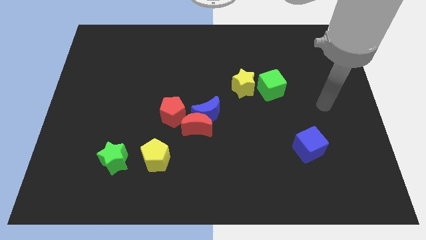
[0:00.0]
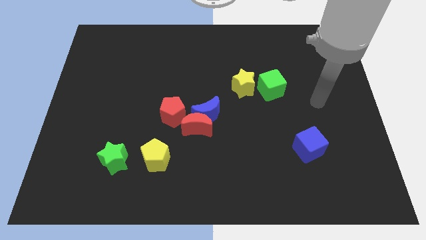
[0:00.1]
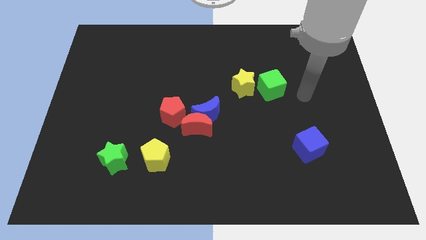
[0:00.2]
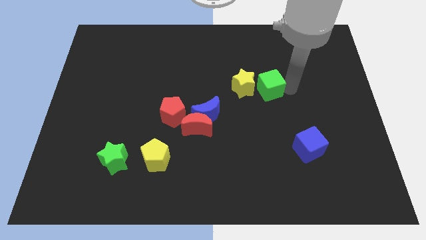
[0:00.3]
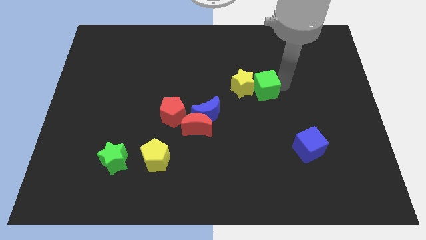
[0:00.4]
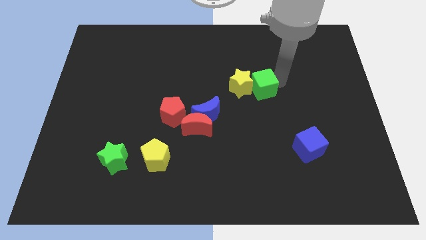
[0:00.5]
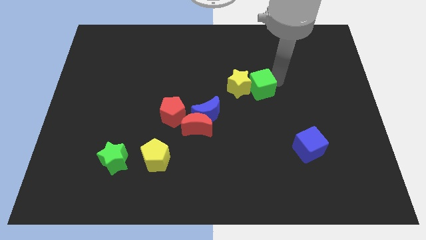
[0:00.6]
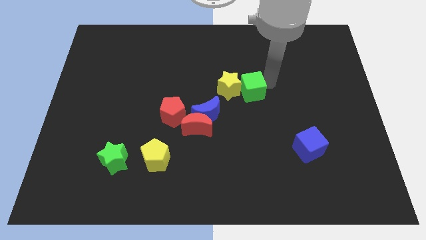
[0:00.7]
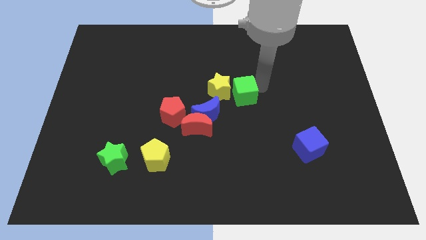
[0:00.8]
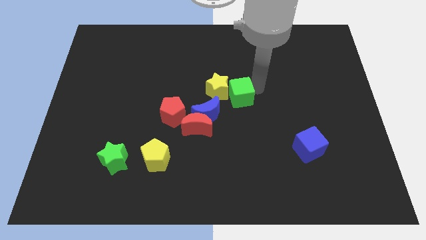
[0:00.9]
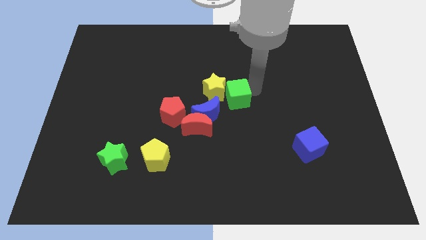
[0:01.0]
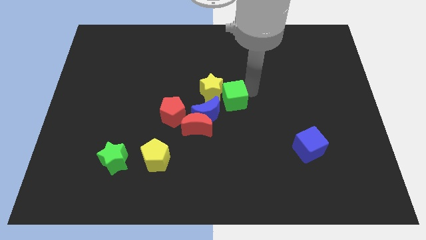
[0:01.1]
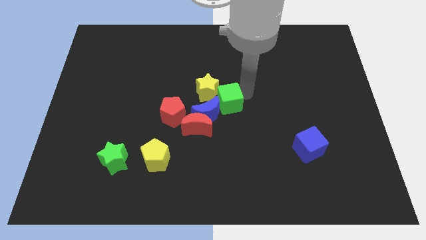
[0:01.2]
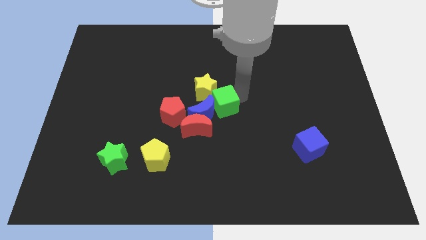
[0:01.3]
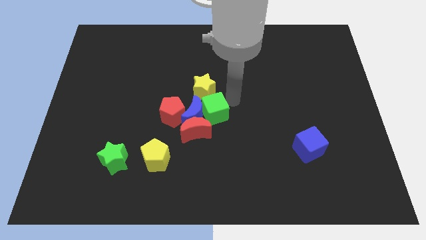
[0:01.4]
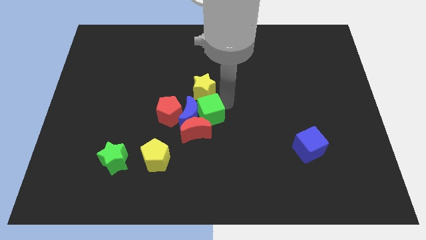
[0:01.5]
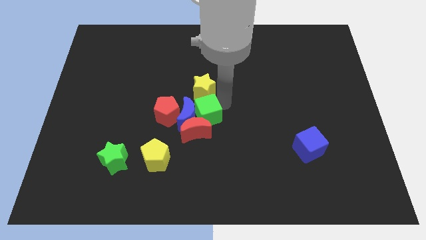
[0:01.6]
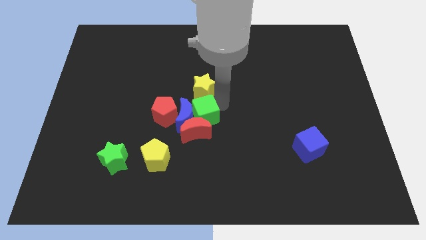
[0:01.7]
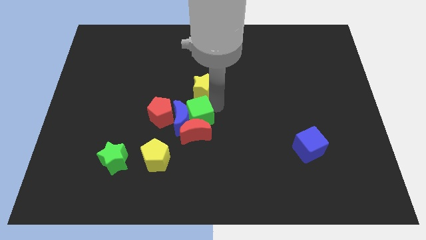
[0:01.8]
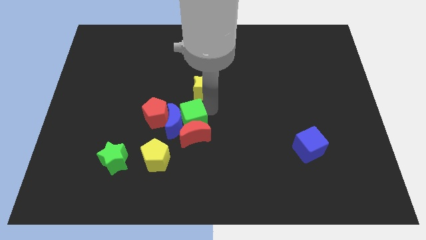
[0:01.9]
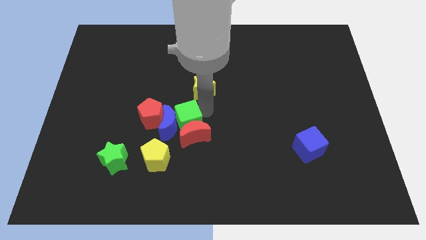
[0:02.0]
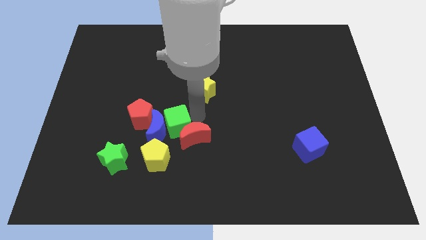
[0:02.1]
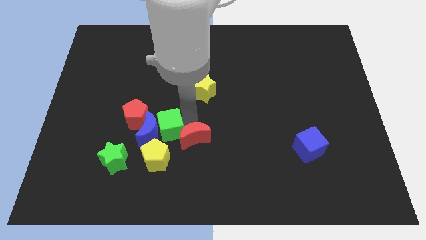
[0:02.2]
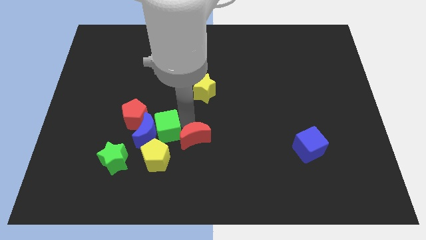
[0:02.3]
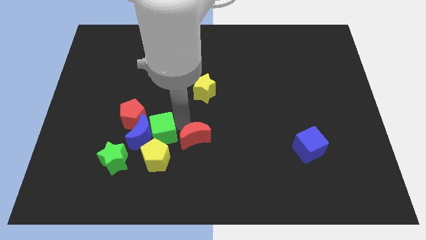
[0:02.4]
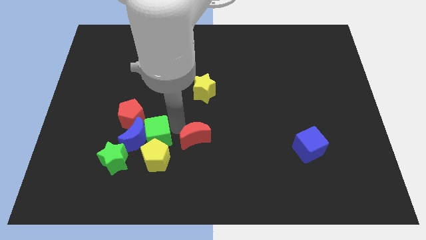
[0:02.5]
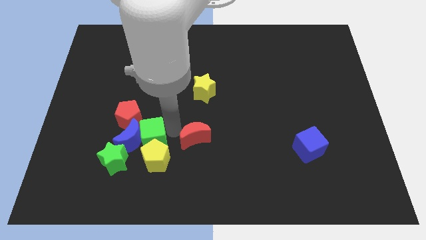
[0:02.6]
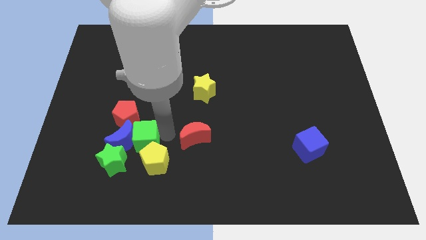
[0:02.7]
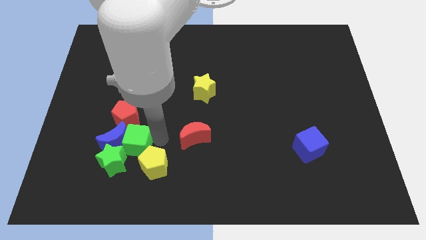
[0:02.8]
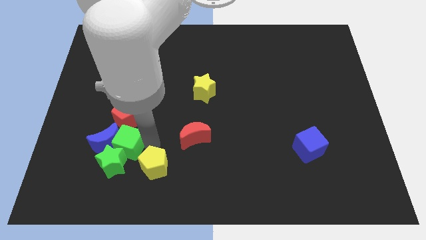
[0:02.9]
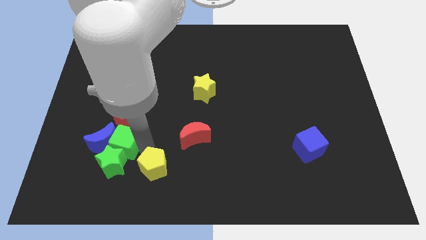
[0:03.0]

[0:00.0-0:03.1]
push the green cube into the green star

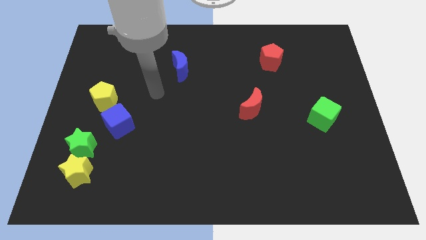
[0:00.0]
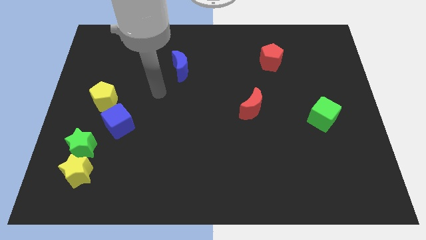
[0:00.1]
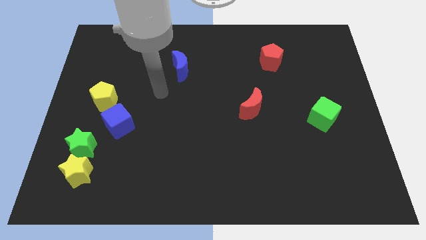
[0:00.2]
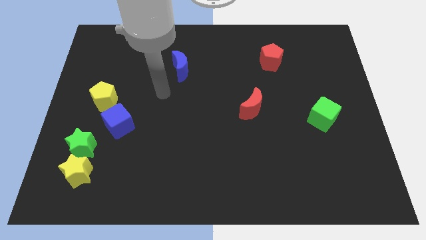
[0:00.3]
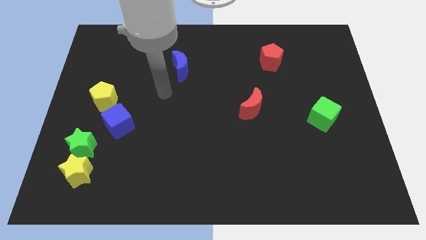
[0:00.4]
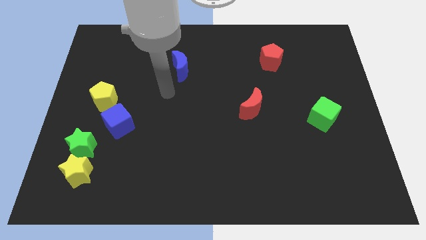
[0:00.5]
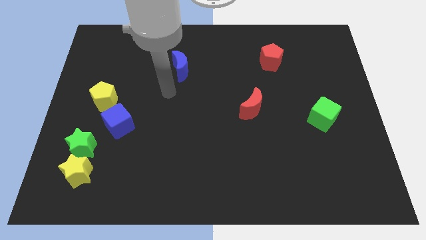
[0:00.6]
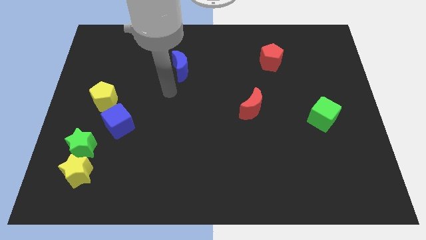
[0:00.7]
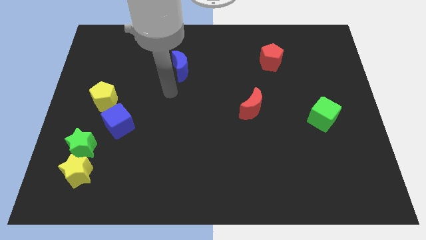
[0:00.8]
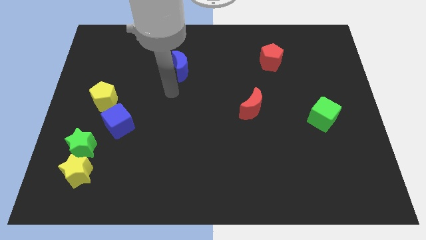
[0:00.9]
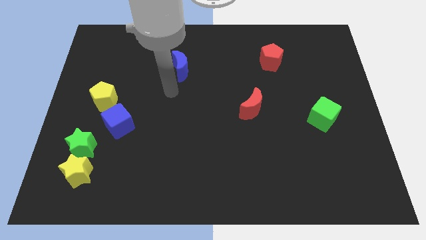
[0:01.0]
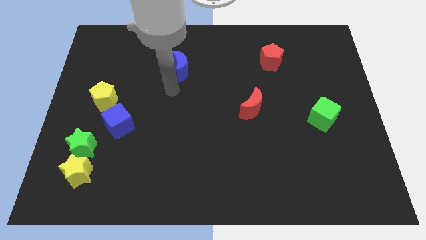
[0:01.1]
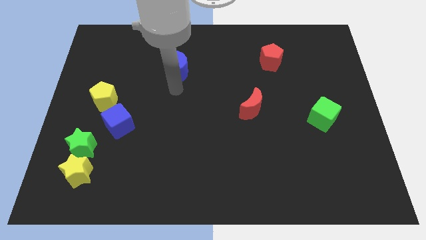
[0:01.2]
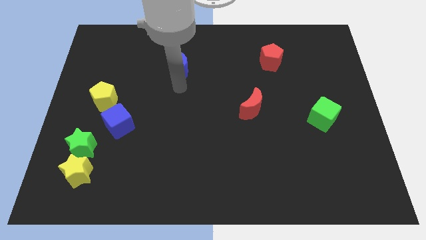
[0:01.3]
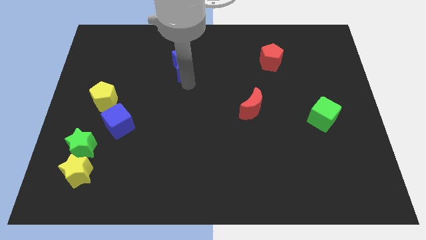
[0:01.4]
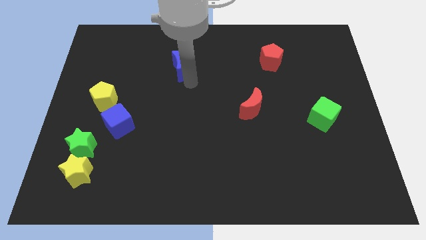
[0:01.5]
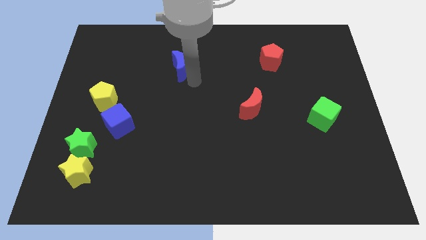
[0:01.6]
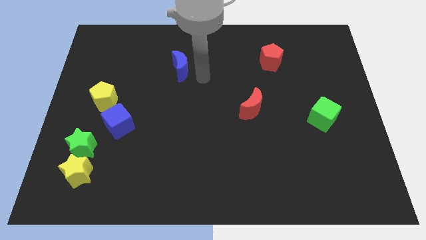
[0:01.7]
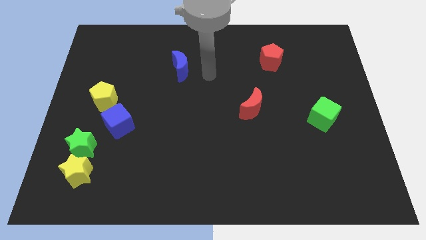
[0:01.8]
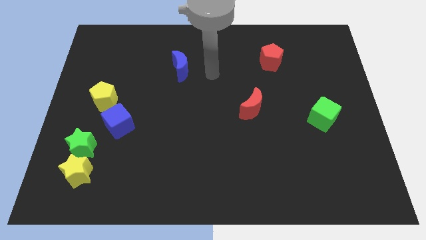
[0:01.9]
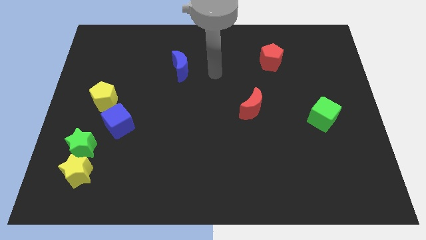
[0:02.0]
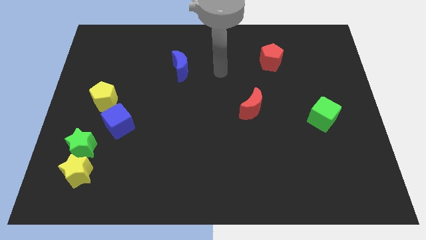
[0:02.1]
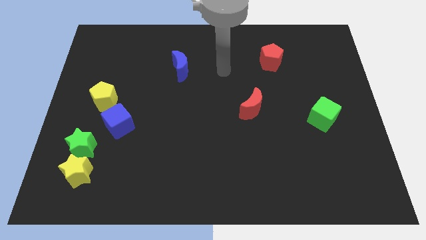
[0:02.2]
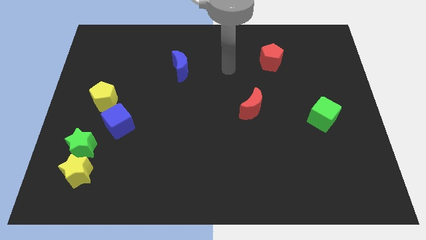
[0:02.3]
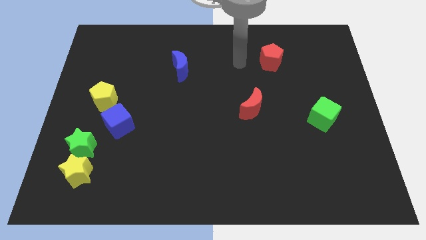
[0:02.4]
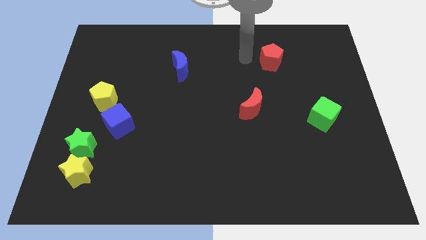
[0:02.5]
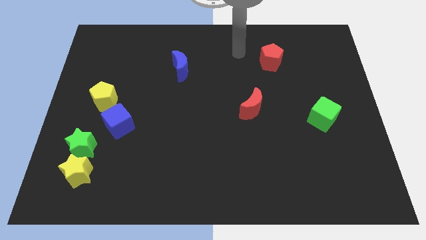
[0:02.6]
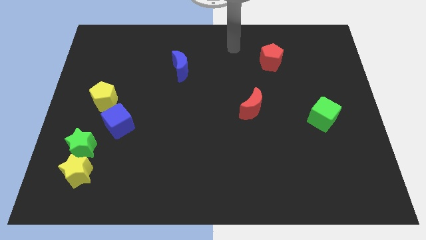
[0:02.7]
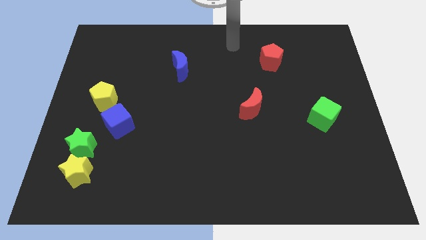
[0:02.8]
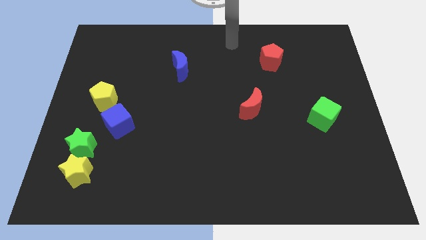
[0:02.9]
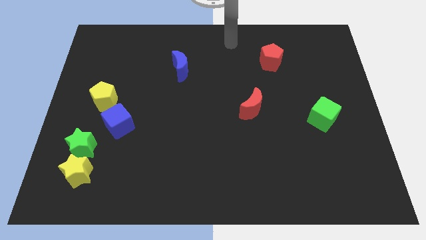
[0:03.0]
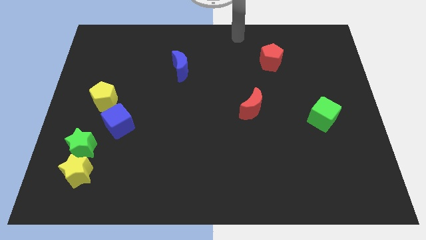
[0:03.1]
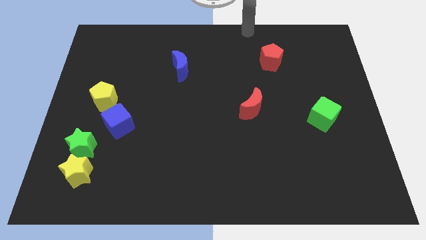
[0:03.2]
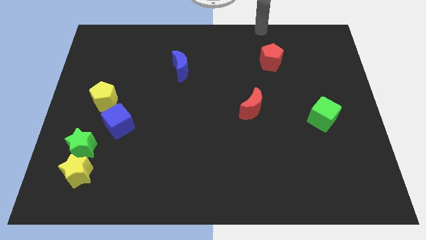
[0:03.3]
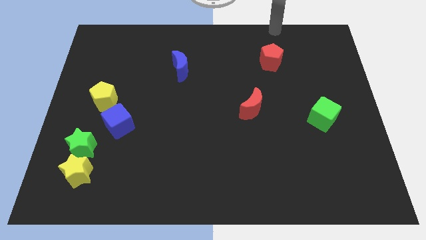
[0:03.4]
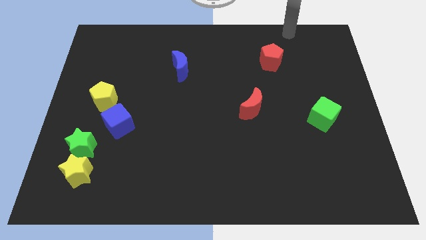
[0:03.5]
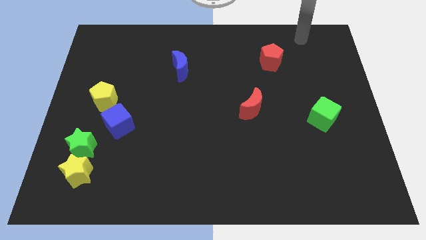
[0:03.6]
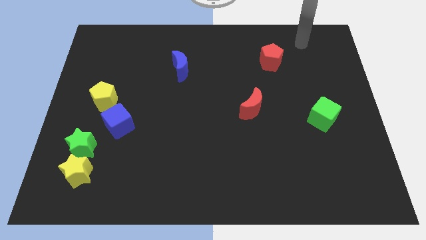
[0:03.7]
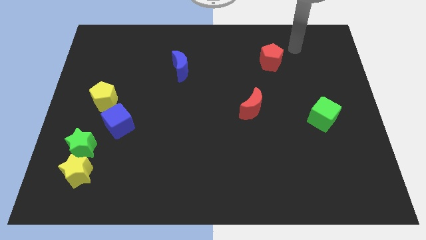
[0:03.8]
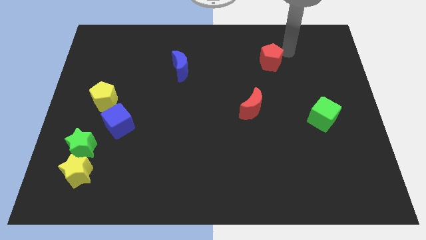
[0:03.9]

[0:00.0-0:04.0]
touch the red pentagon with your arm

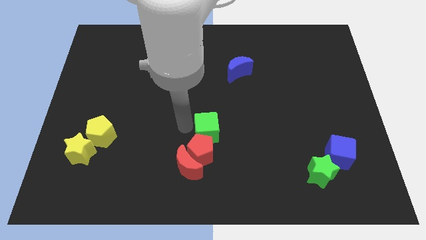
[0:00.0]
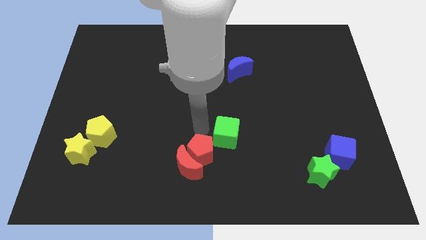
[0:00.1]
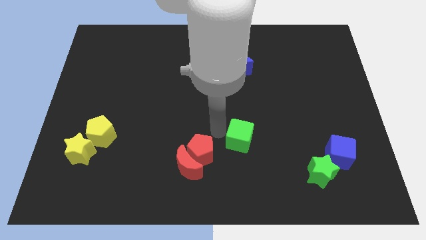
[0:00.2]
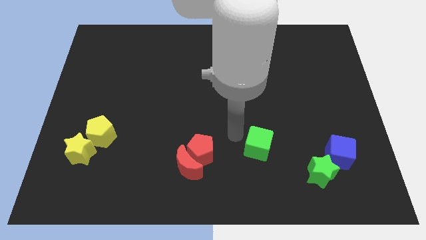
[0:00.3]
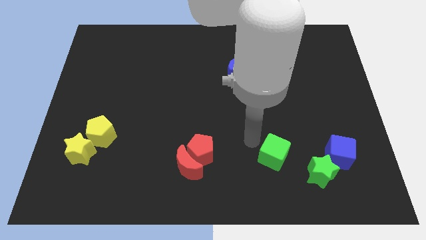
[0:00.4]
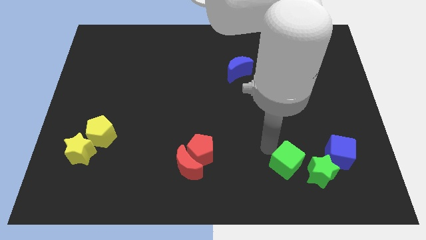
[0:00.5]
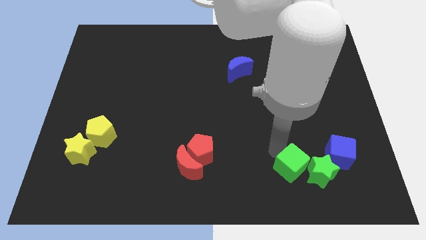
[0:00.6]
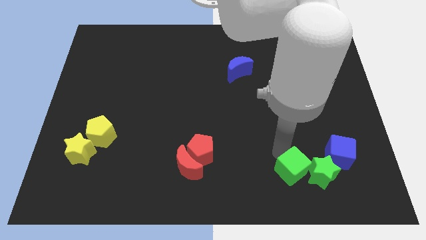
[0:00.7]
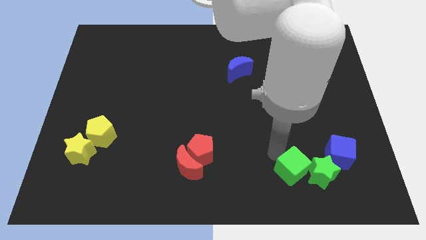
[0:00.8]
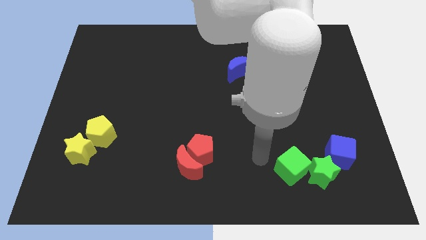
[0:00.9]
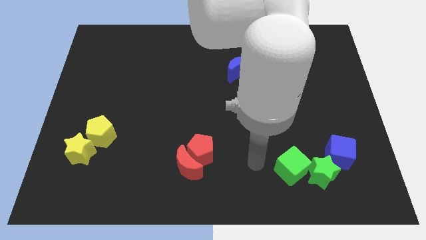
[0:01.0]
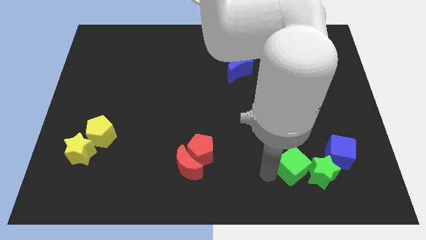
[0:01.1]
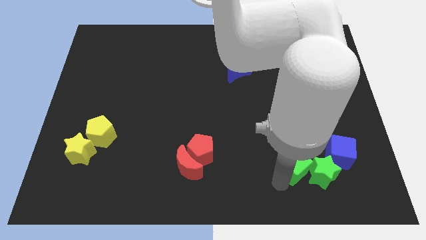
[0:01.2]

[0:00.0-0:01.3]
move the green cube left beside the green star

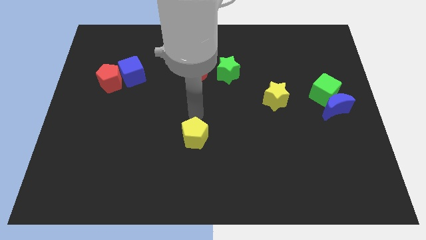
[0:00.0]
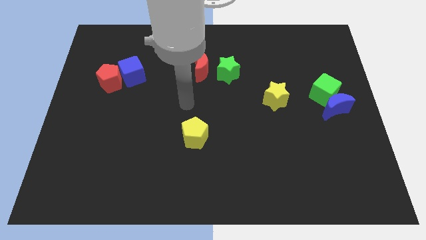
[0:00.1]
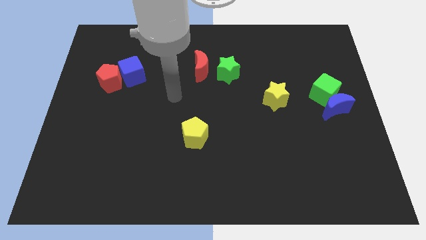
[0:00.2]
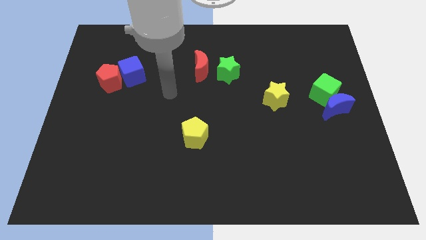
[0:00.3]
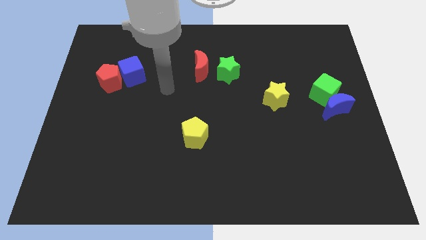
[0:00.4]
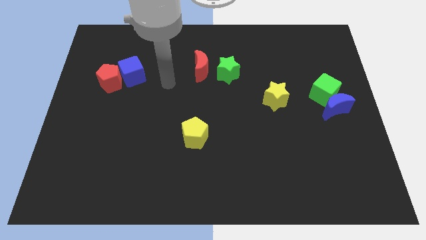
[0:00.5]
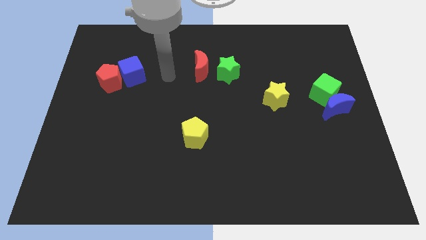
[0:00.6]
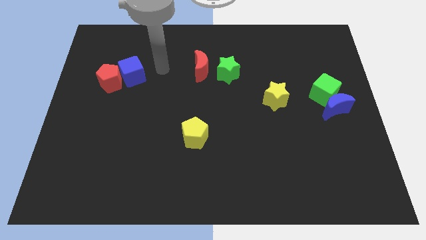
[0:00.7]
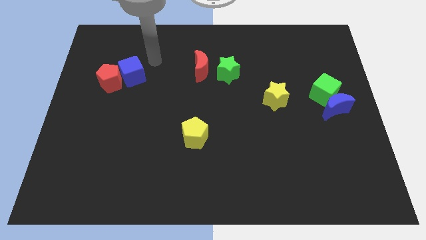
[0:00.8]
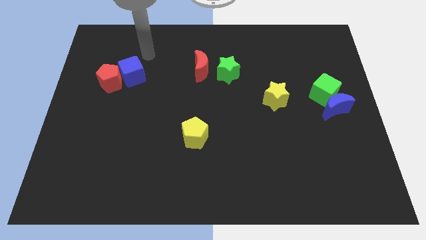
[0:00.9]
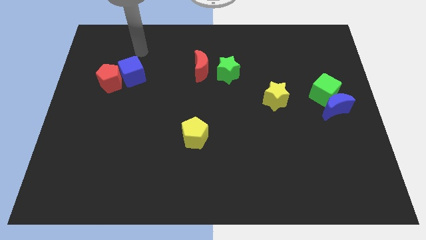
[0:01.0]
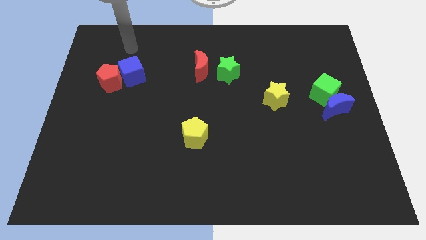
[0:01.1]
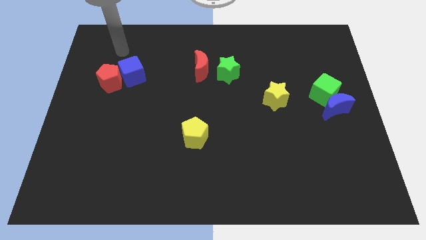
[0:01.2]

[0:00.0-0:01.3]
move your arm away from the yellow pentagon
